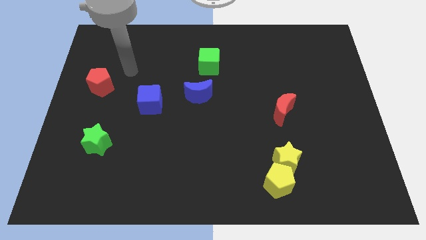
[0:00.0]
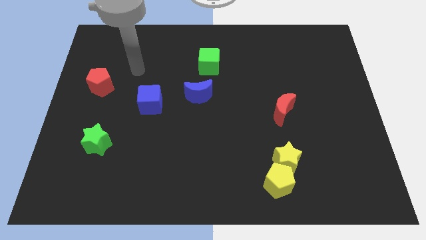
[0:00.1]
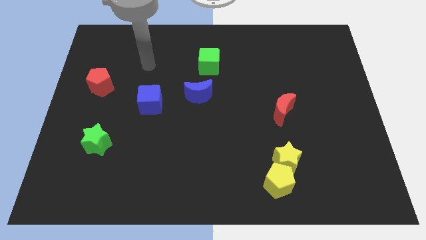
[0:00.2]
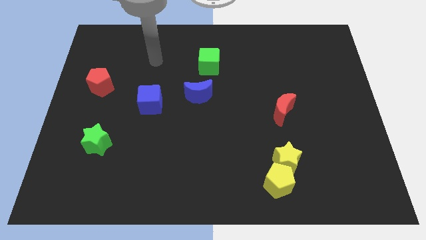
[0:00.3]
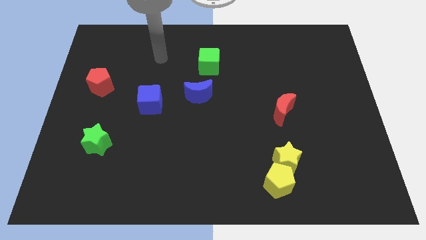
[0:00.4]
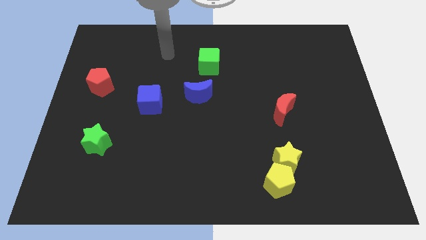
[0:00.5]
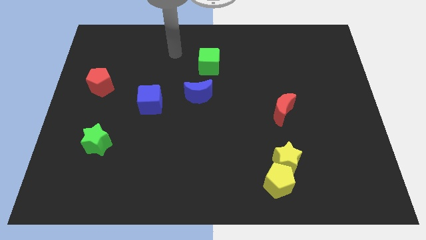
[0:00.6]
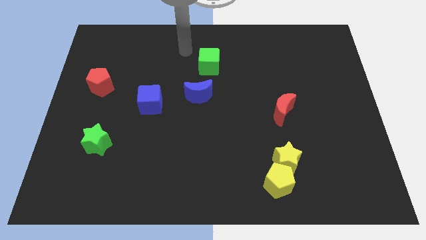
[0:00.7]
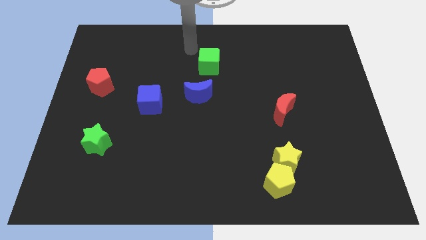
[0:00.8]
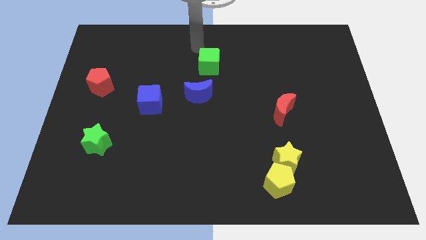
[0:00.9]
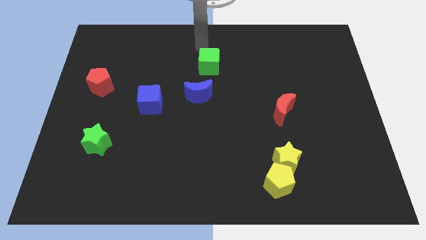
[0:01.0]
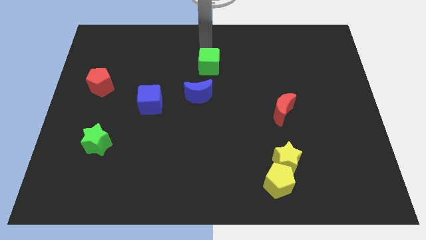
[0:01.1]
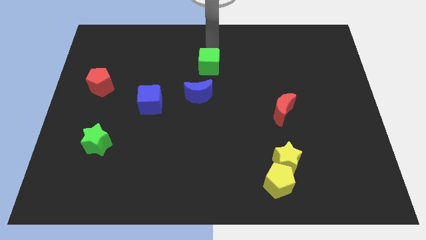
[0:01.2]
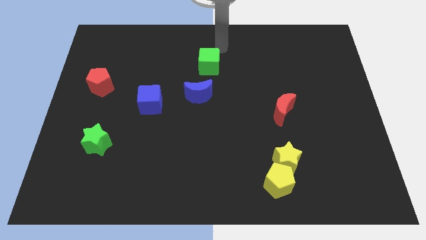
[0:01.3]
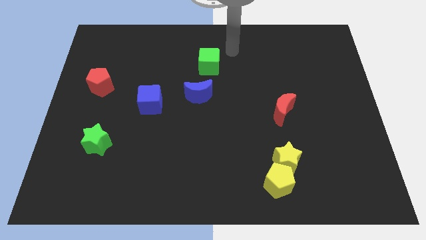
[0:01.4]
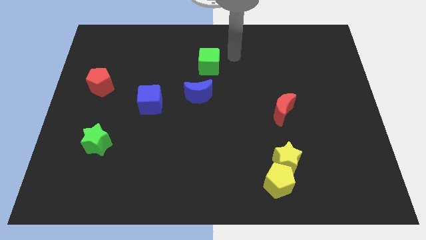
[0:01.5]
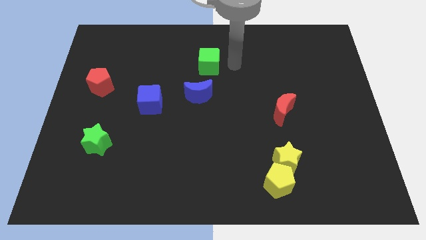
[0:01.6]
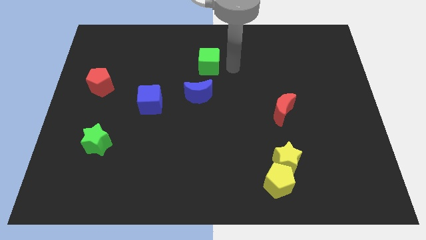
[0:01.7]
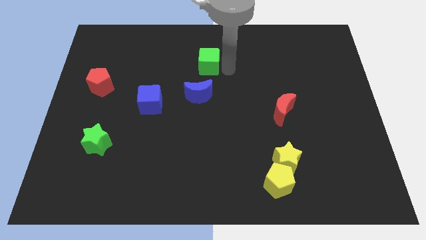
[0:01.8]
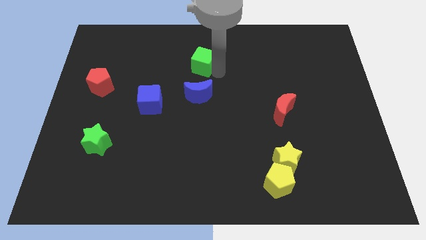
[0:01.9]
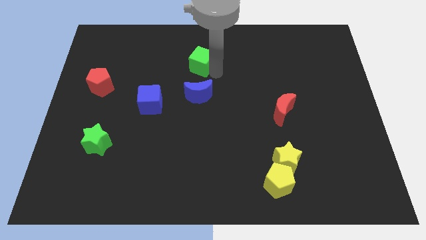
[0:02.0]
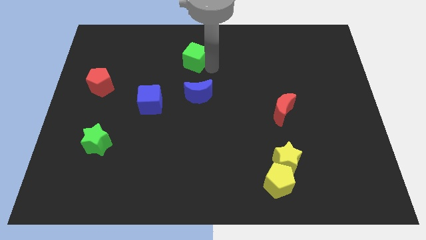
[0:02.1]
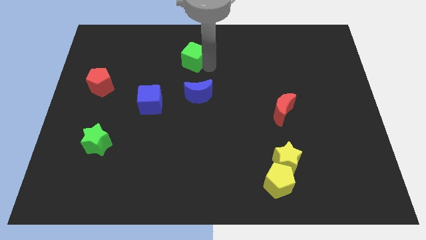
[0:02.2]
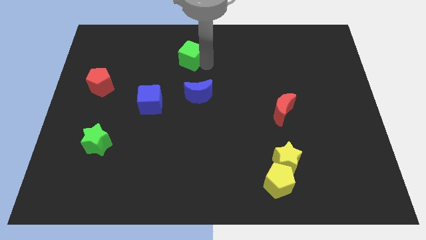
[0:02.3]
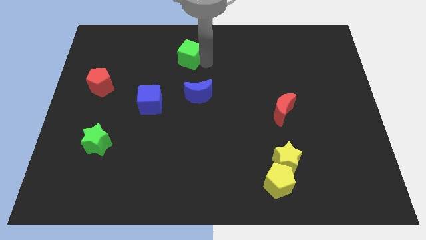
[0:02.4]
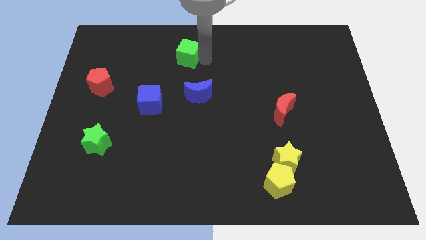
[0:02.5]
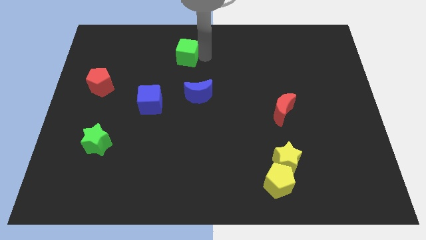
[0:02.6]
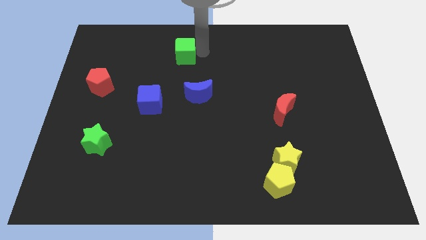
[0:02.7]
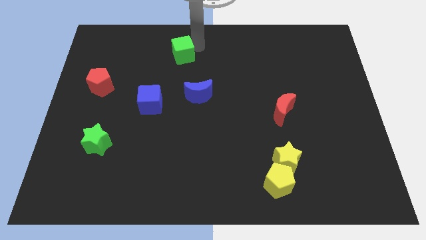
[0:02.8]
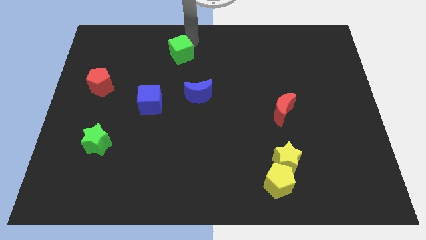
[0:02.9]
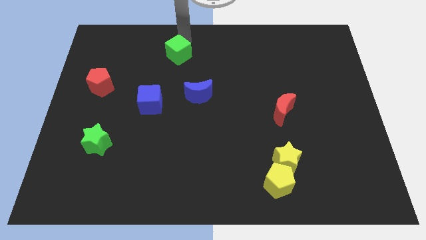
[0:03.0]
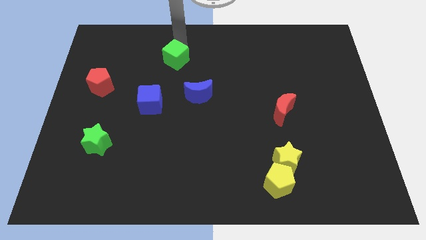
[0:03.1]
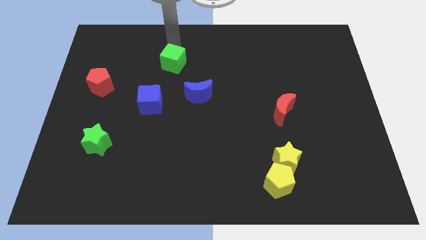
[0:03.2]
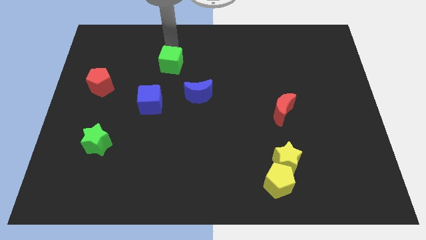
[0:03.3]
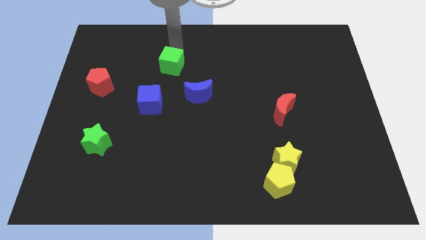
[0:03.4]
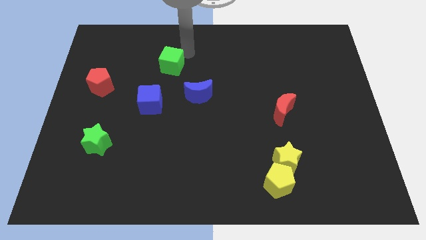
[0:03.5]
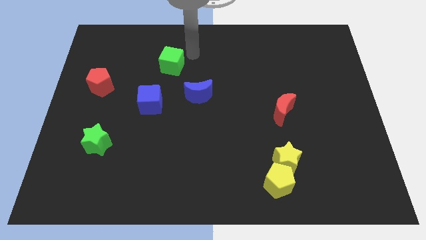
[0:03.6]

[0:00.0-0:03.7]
move the green cube parallel to the blue blocks

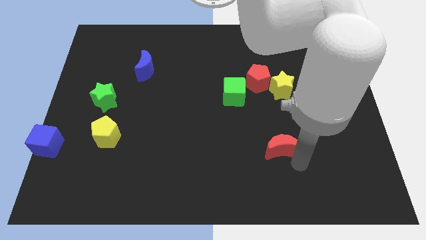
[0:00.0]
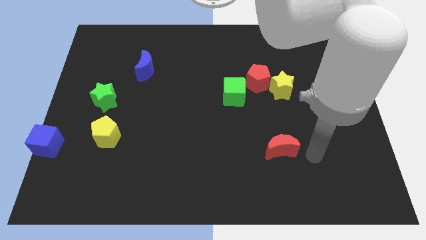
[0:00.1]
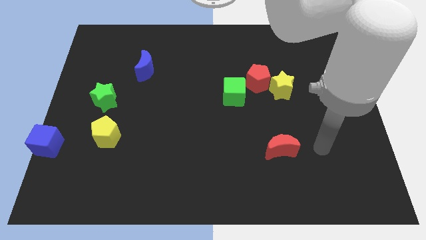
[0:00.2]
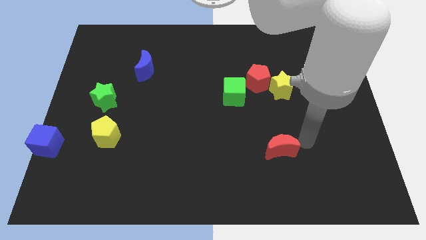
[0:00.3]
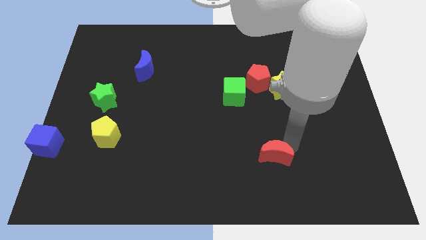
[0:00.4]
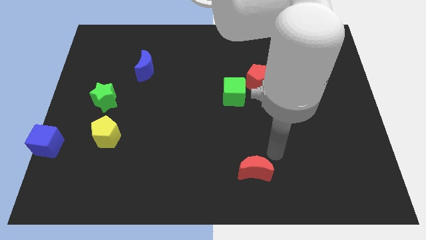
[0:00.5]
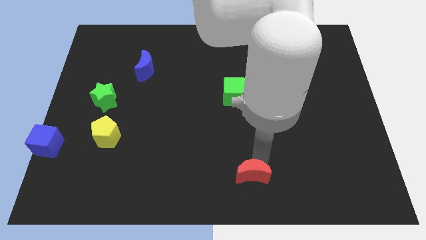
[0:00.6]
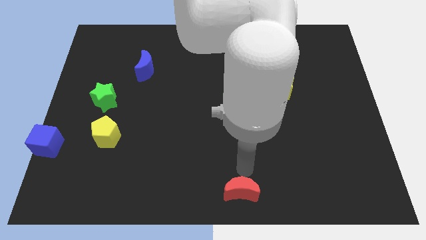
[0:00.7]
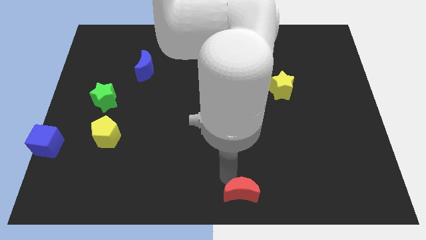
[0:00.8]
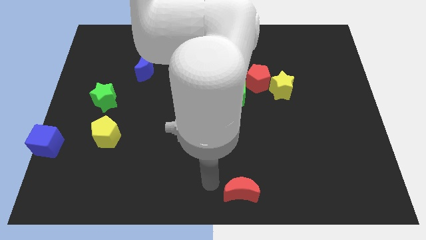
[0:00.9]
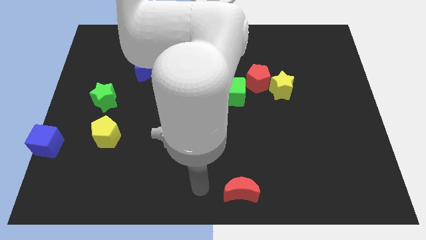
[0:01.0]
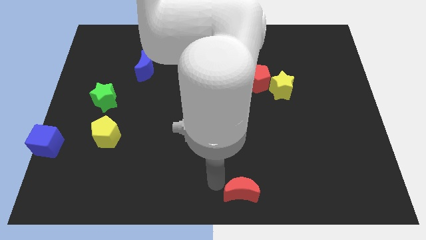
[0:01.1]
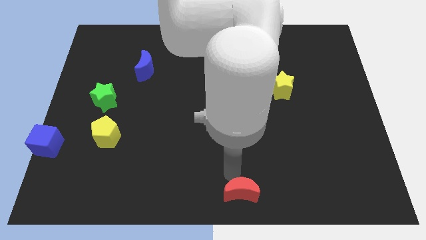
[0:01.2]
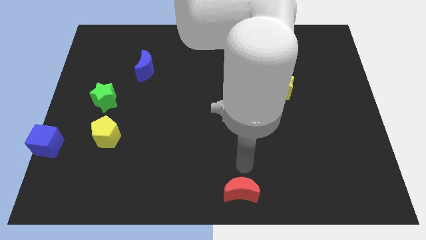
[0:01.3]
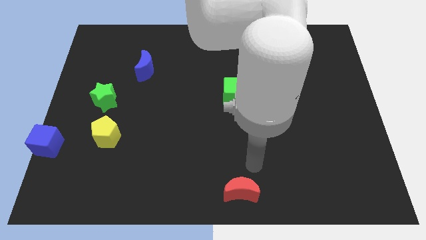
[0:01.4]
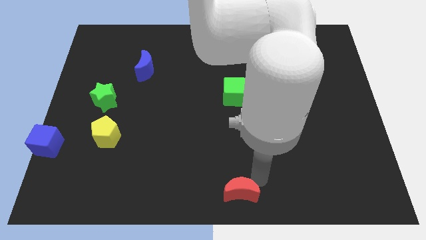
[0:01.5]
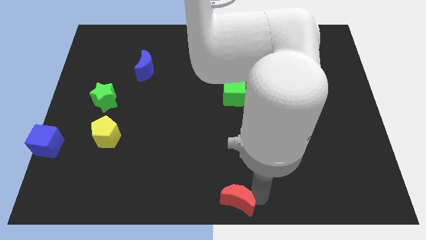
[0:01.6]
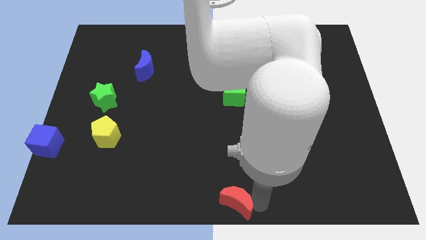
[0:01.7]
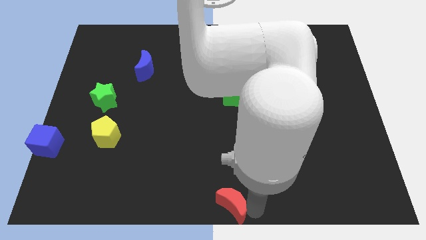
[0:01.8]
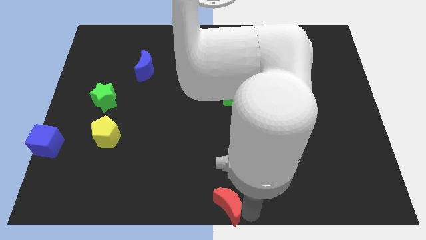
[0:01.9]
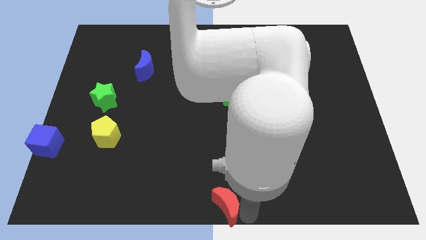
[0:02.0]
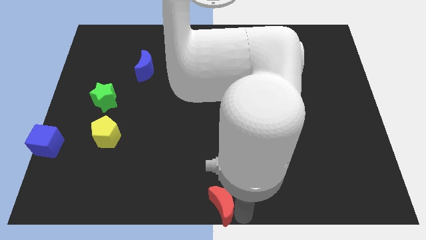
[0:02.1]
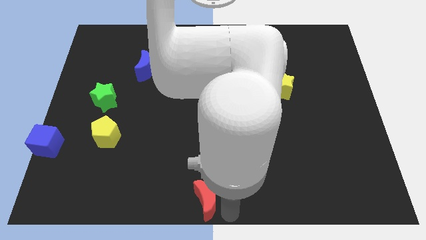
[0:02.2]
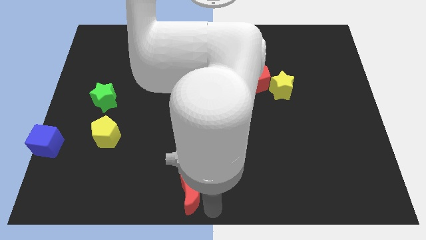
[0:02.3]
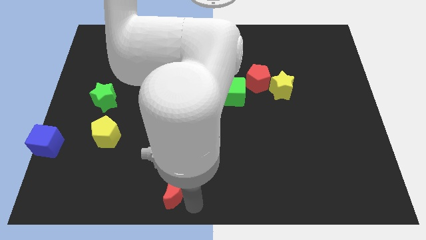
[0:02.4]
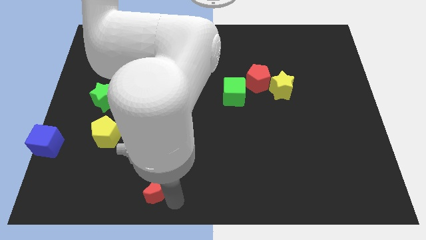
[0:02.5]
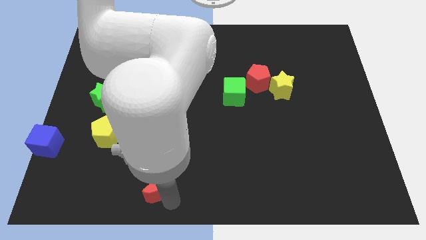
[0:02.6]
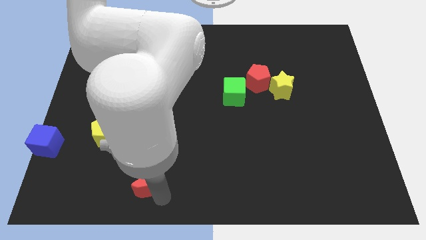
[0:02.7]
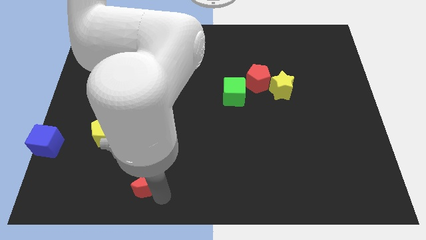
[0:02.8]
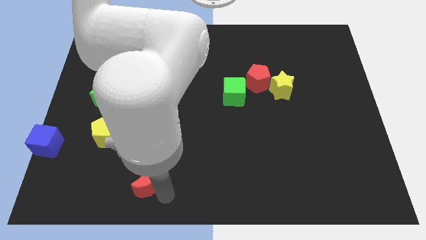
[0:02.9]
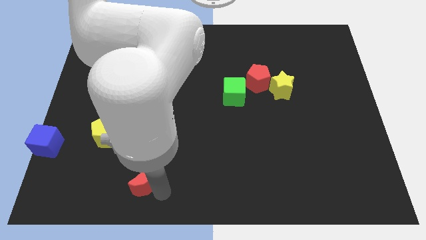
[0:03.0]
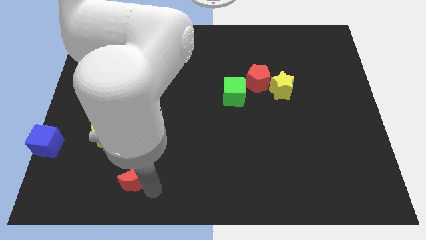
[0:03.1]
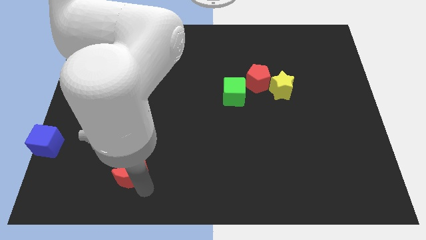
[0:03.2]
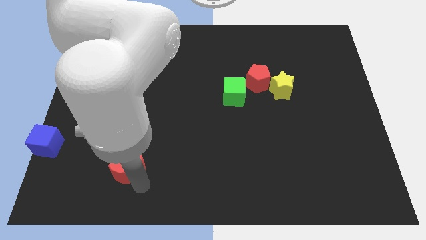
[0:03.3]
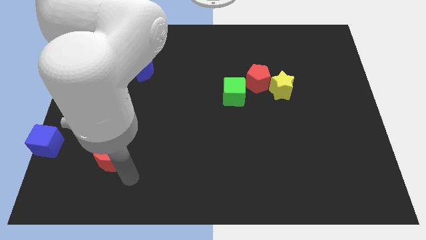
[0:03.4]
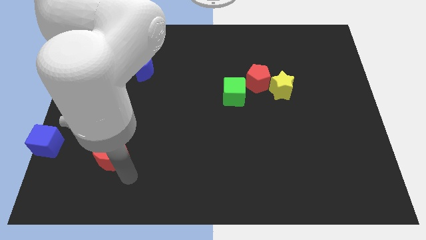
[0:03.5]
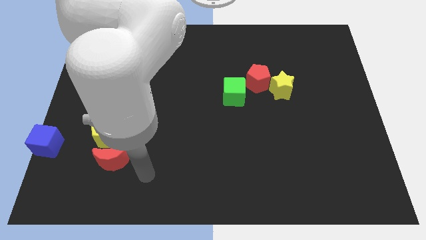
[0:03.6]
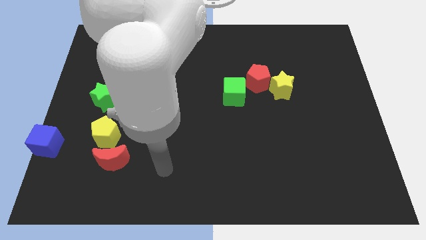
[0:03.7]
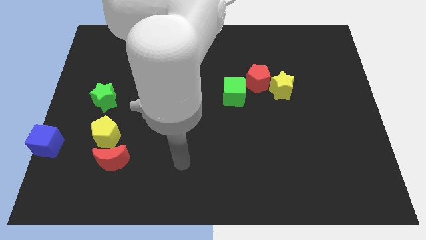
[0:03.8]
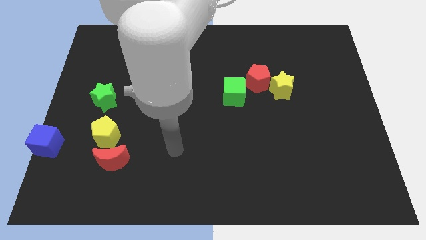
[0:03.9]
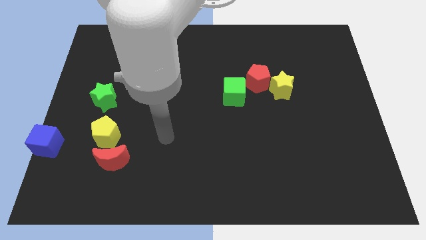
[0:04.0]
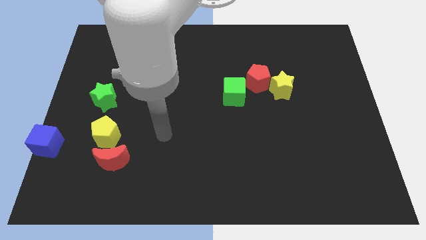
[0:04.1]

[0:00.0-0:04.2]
move red moon close to yellow pentagon

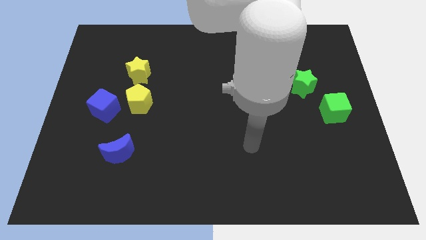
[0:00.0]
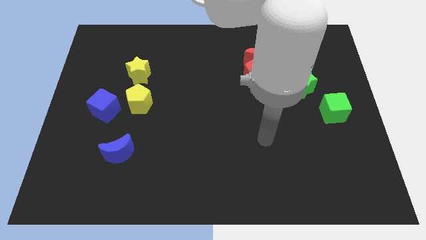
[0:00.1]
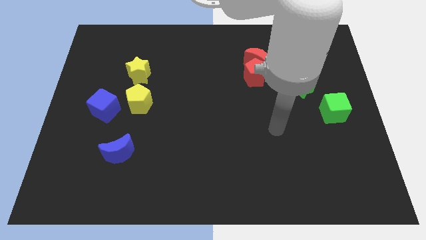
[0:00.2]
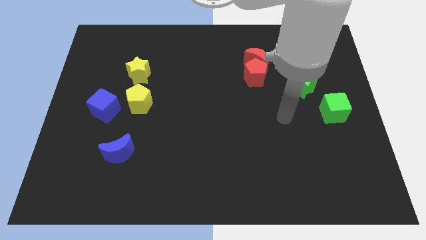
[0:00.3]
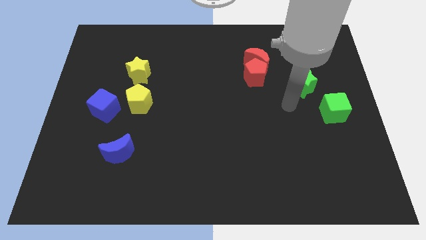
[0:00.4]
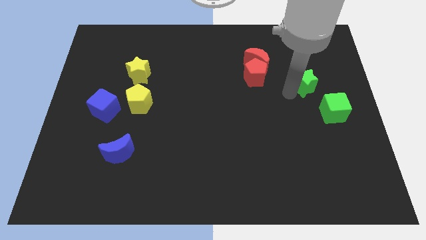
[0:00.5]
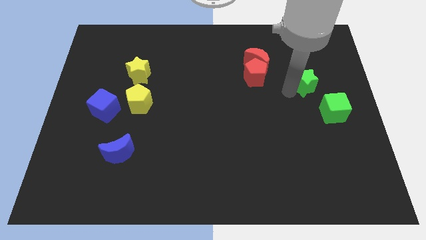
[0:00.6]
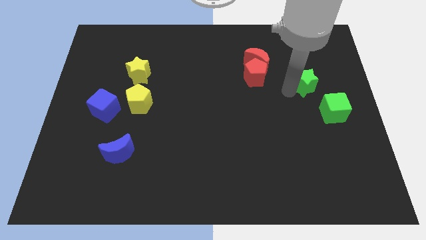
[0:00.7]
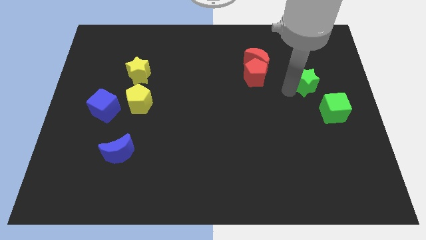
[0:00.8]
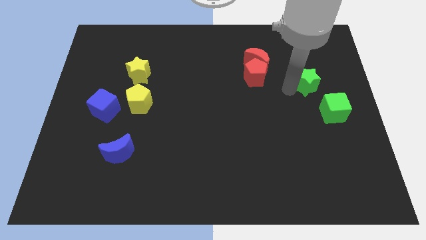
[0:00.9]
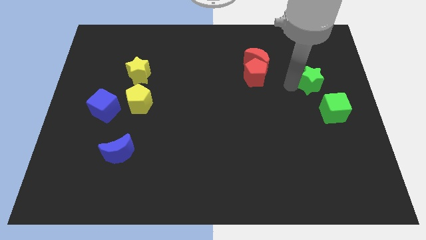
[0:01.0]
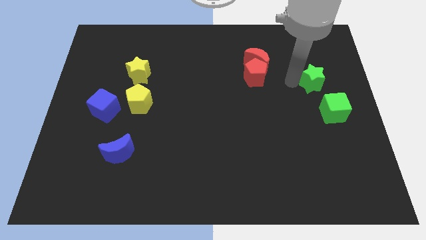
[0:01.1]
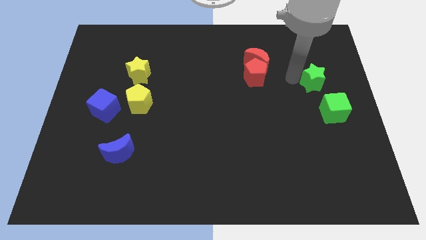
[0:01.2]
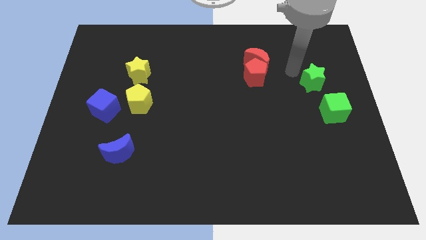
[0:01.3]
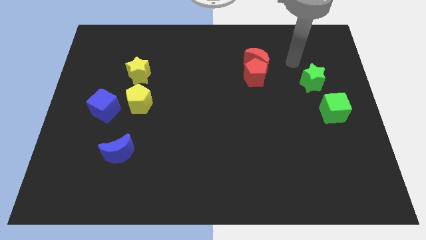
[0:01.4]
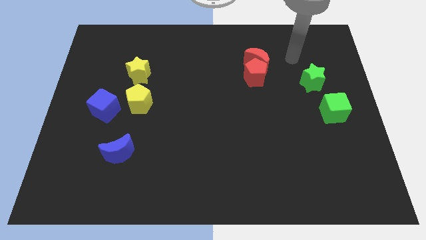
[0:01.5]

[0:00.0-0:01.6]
slightly push the green star to the right of the board
